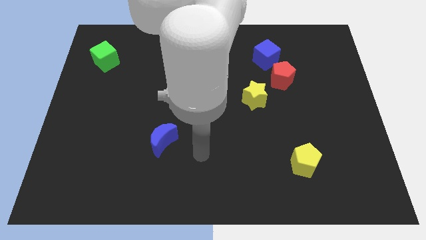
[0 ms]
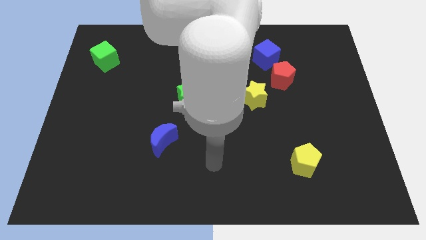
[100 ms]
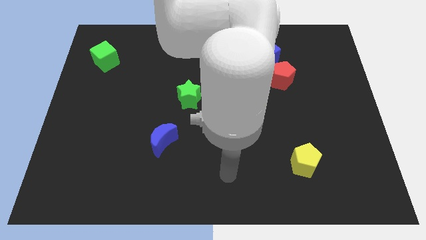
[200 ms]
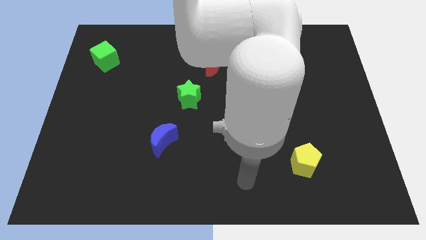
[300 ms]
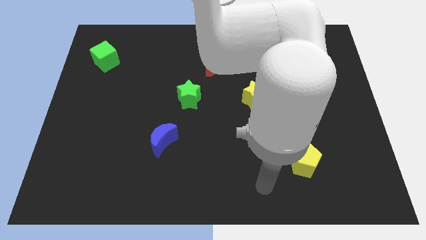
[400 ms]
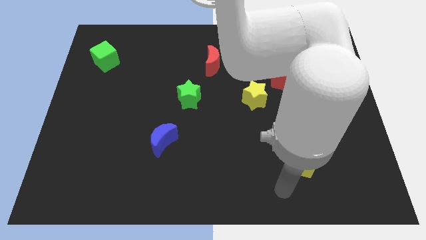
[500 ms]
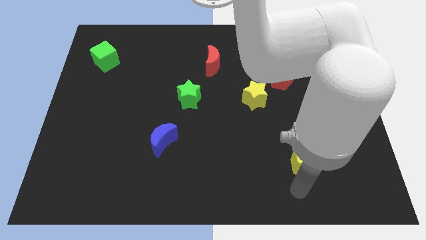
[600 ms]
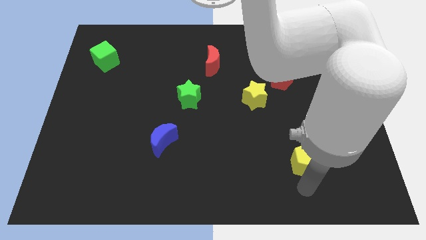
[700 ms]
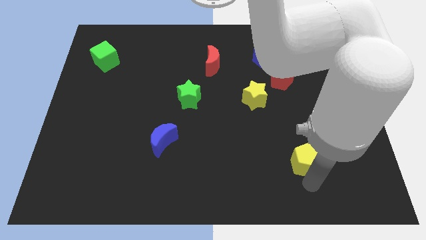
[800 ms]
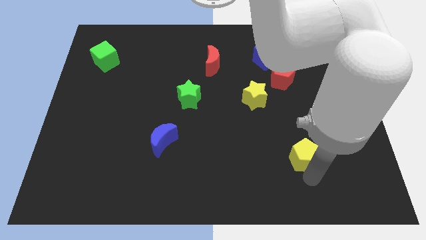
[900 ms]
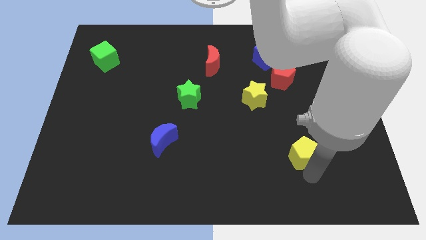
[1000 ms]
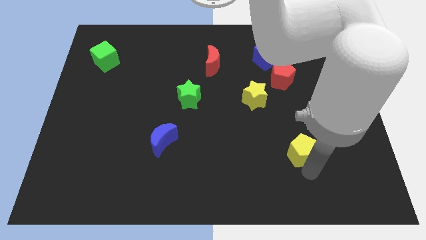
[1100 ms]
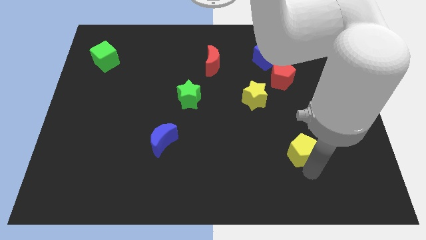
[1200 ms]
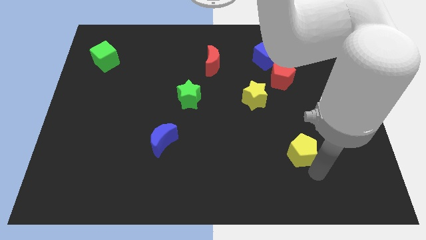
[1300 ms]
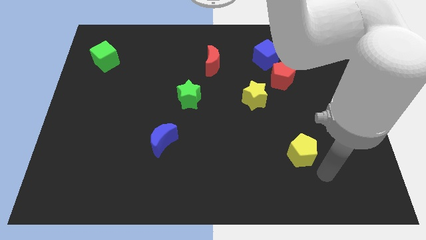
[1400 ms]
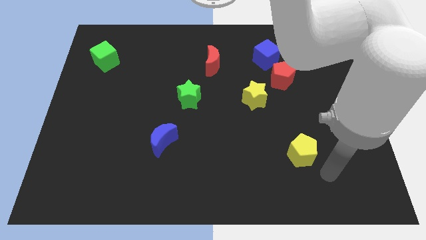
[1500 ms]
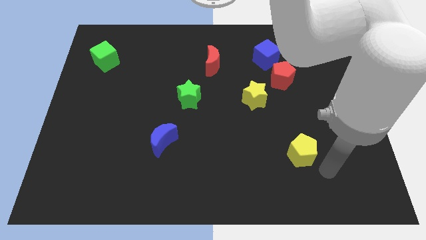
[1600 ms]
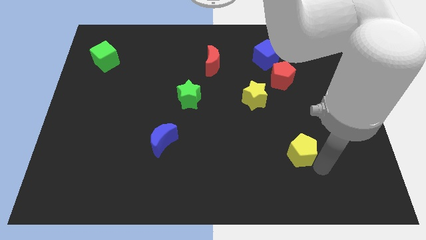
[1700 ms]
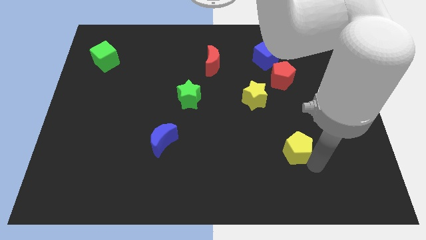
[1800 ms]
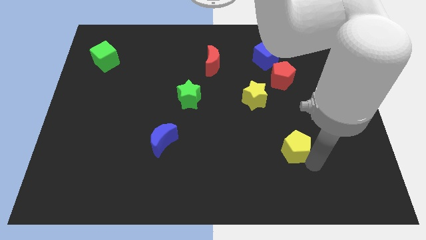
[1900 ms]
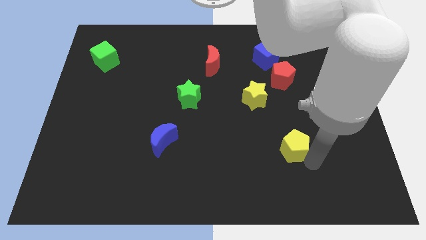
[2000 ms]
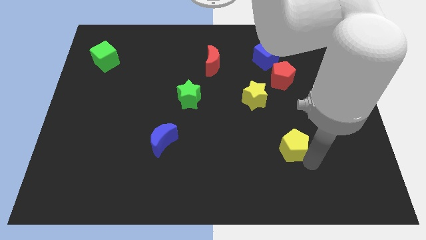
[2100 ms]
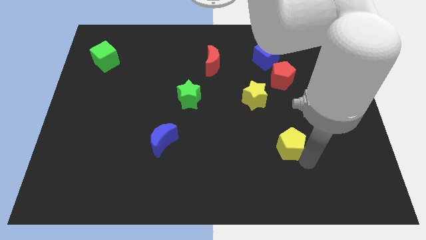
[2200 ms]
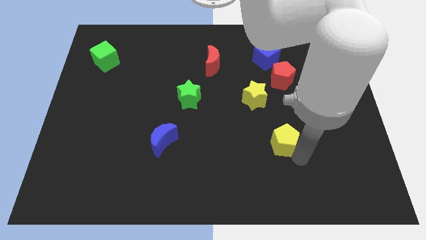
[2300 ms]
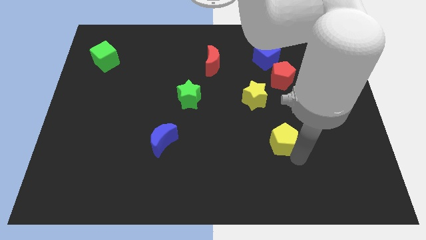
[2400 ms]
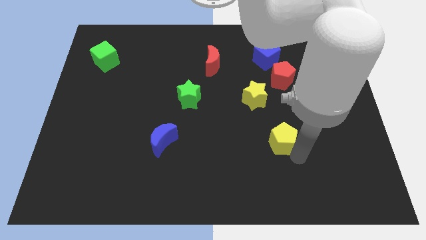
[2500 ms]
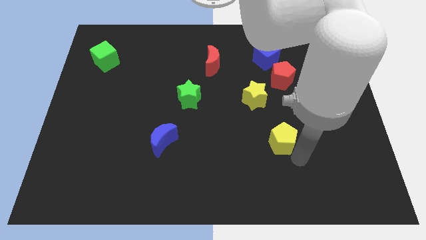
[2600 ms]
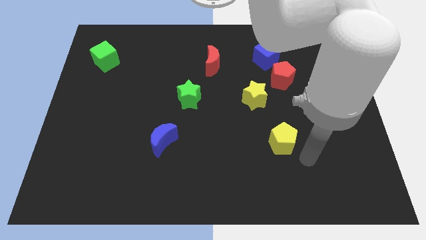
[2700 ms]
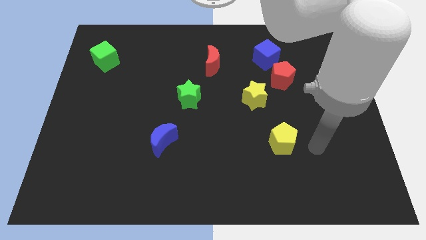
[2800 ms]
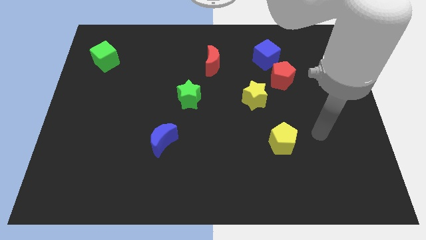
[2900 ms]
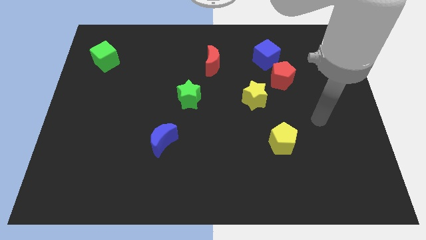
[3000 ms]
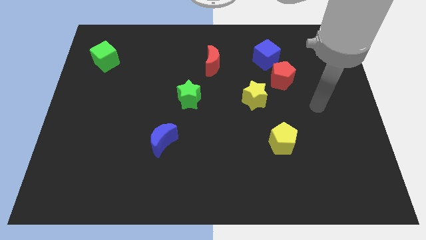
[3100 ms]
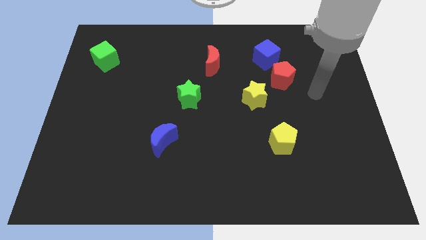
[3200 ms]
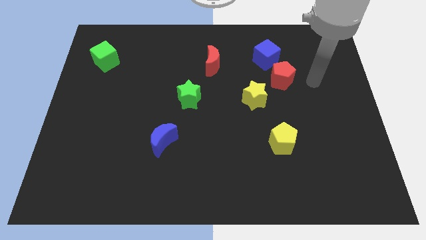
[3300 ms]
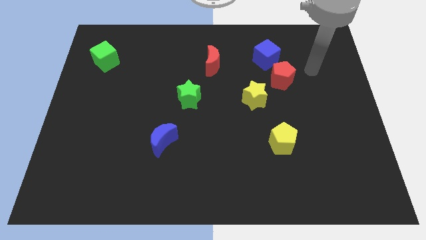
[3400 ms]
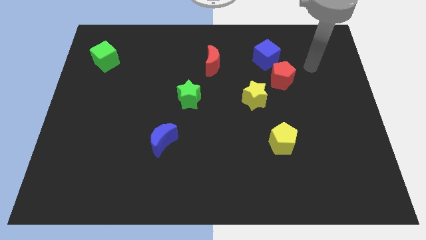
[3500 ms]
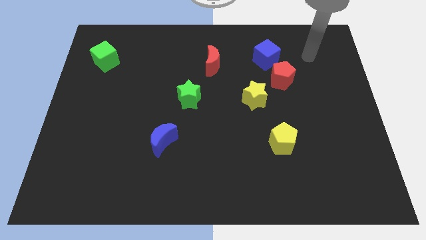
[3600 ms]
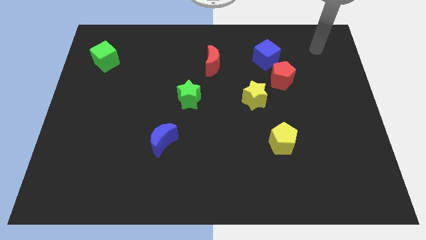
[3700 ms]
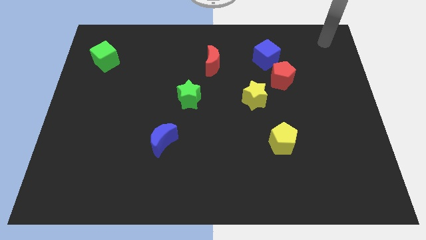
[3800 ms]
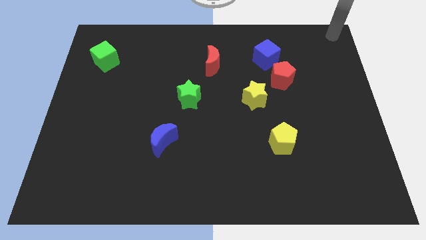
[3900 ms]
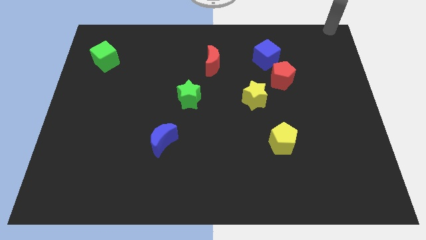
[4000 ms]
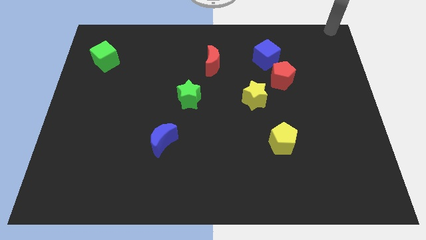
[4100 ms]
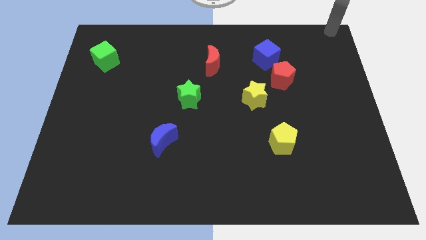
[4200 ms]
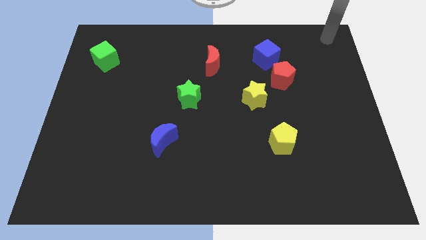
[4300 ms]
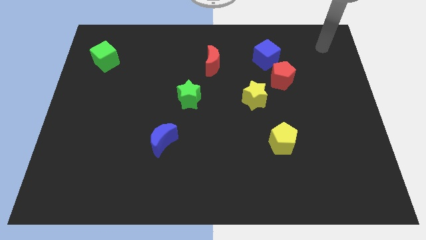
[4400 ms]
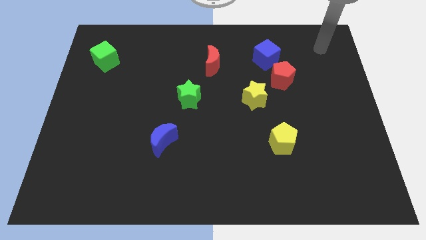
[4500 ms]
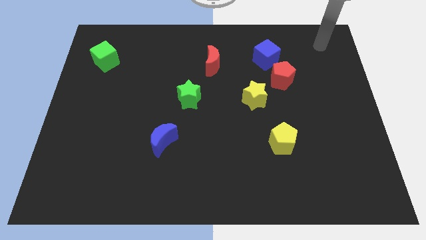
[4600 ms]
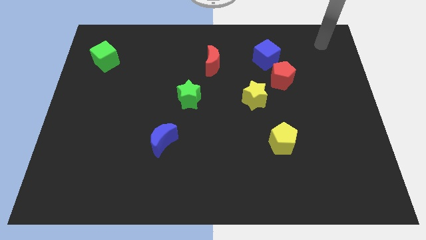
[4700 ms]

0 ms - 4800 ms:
place the yellow pentagon below the yellow star

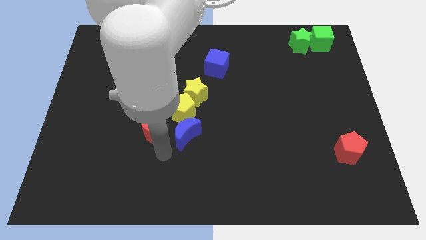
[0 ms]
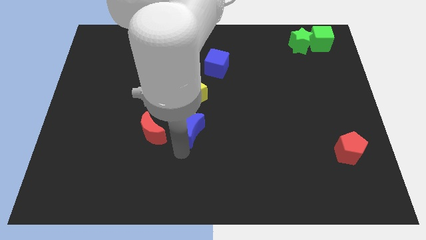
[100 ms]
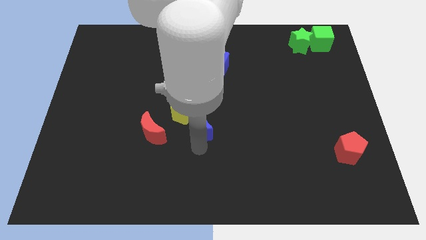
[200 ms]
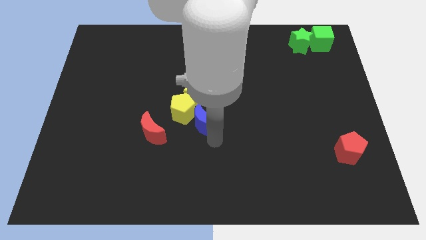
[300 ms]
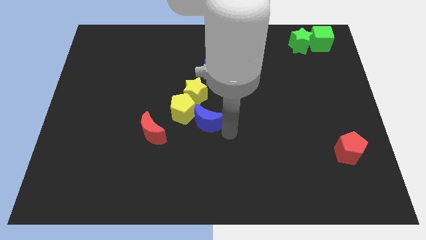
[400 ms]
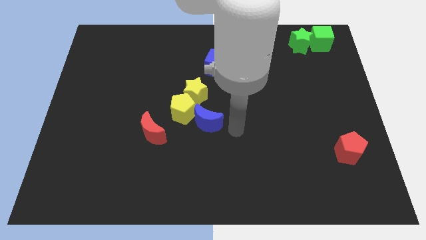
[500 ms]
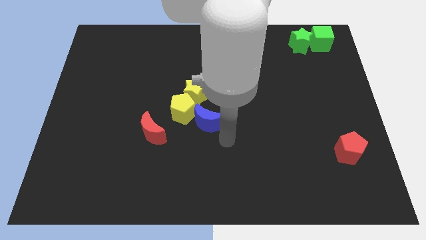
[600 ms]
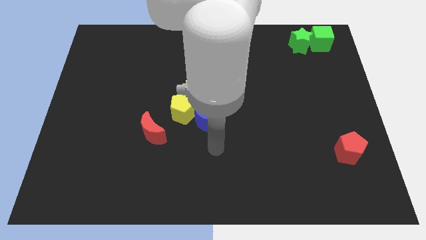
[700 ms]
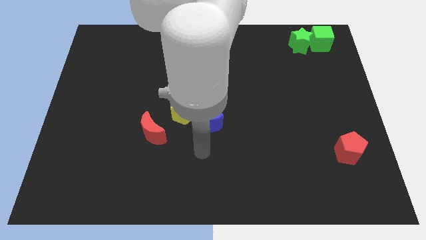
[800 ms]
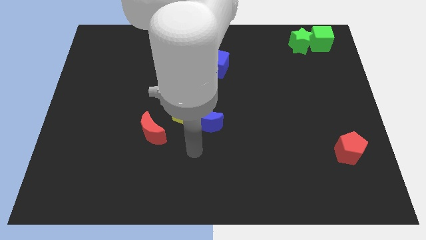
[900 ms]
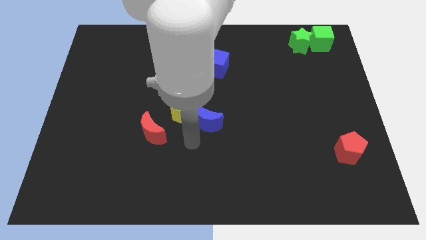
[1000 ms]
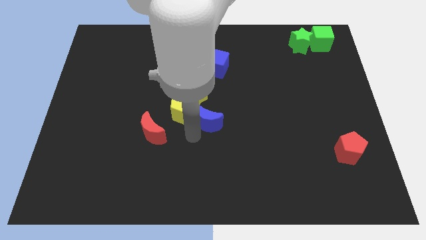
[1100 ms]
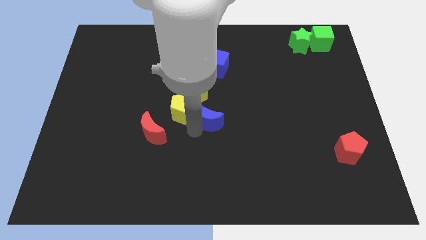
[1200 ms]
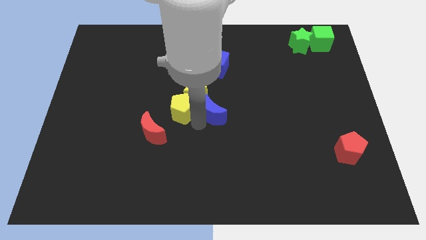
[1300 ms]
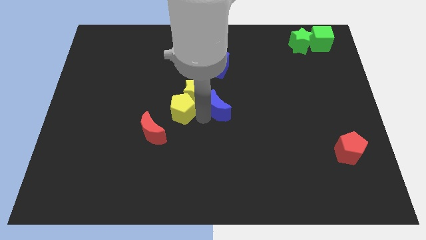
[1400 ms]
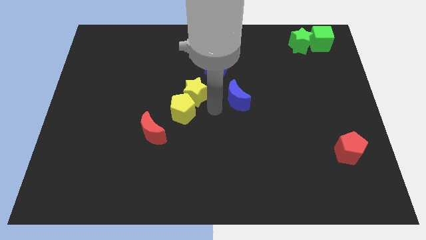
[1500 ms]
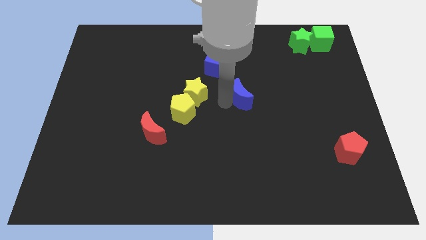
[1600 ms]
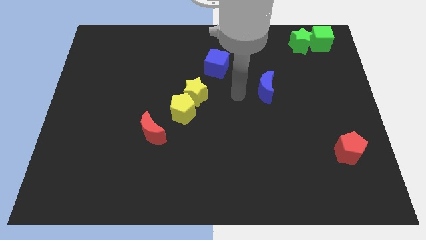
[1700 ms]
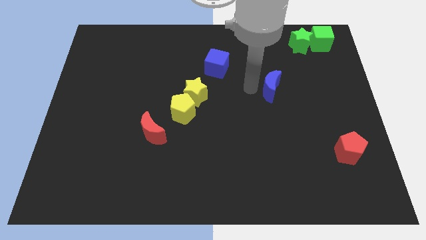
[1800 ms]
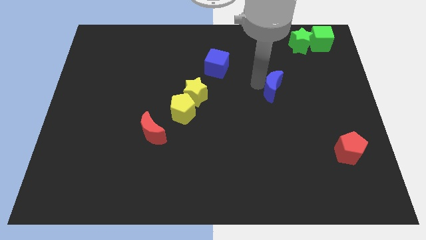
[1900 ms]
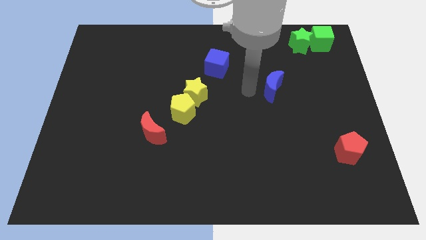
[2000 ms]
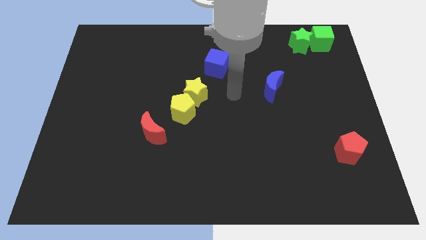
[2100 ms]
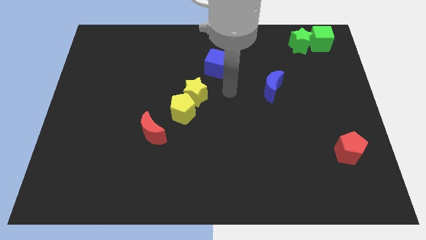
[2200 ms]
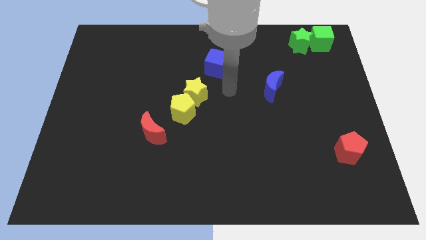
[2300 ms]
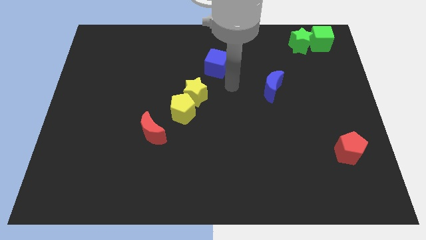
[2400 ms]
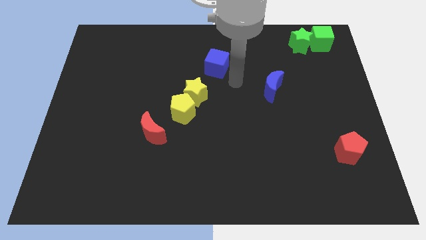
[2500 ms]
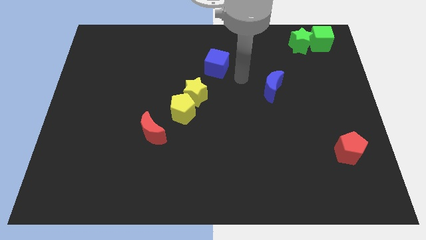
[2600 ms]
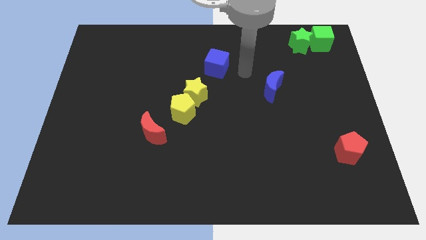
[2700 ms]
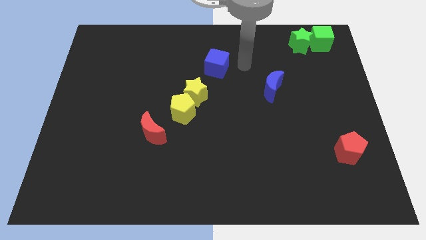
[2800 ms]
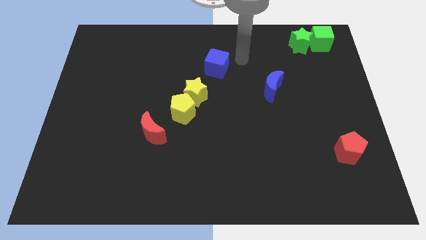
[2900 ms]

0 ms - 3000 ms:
move the blue crescent towards green blocks

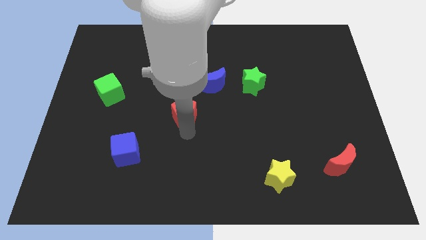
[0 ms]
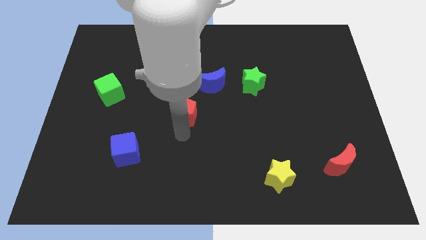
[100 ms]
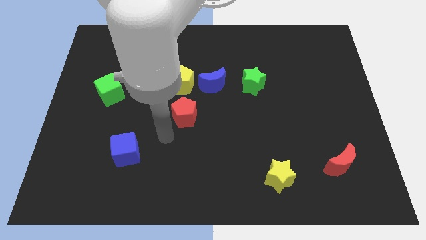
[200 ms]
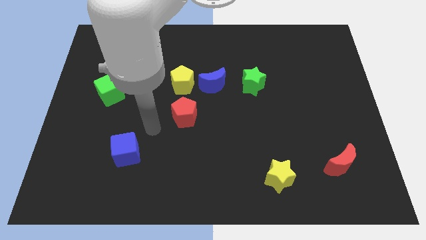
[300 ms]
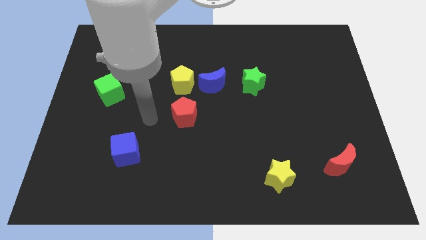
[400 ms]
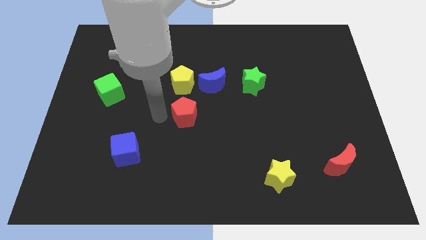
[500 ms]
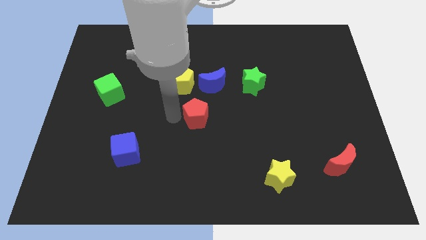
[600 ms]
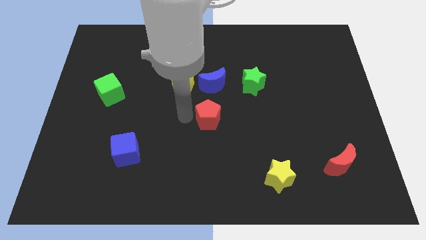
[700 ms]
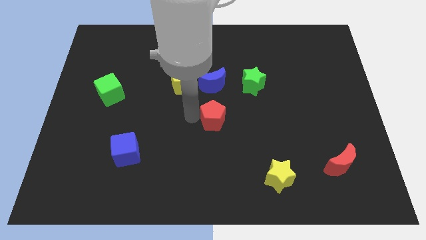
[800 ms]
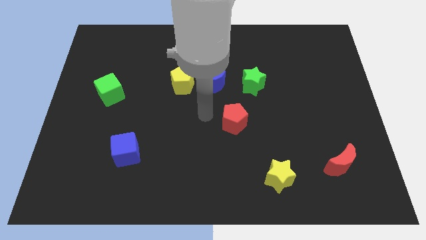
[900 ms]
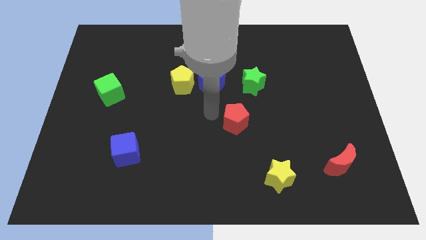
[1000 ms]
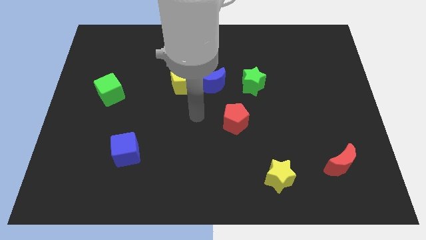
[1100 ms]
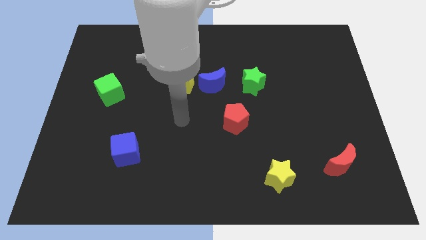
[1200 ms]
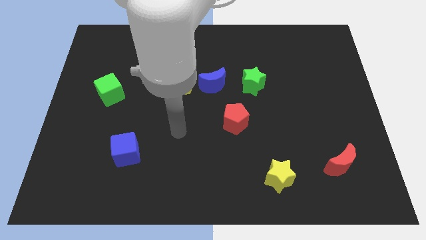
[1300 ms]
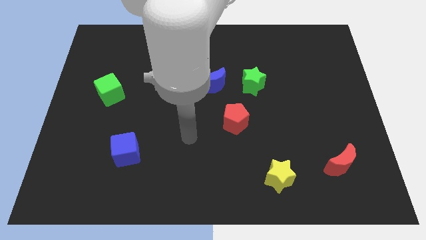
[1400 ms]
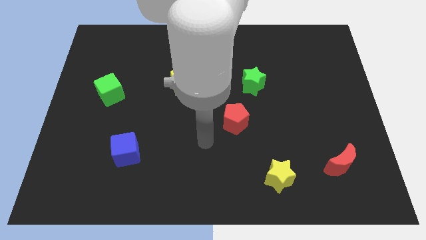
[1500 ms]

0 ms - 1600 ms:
slide the red pentagon to the right
